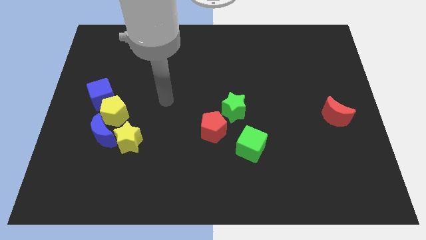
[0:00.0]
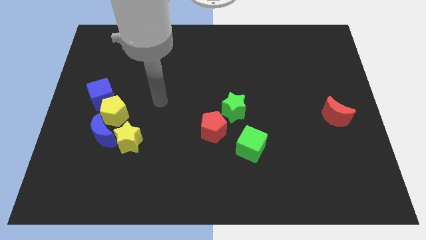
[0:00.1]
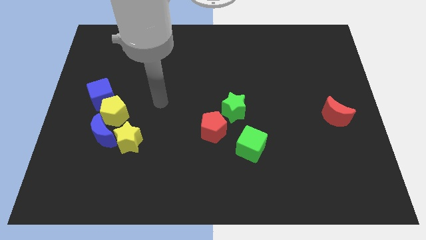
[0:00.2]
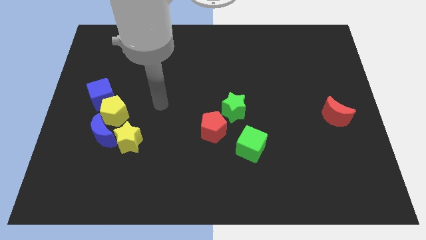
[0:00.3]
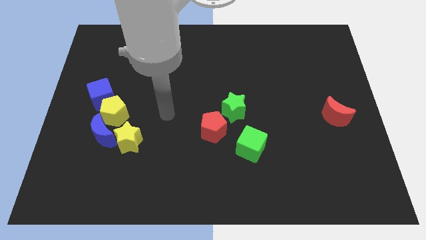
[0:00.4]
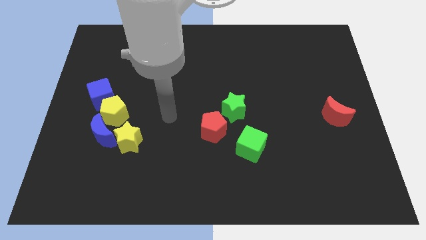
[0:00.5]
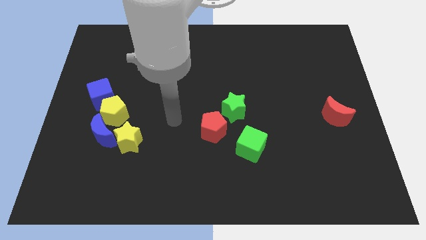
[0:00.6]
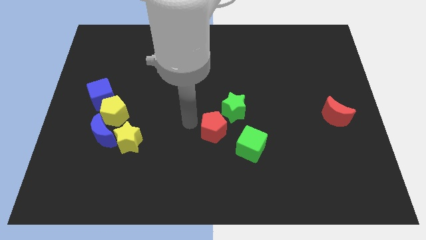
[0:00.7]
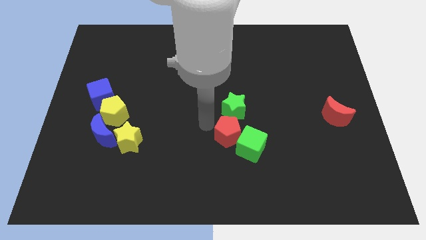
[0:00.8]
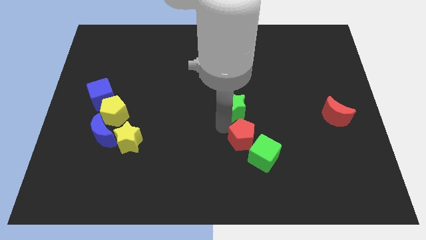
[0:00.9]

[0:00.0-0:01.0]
push the red pentagon into the green cube

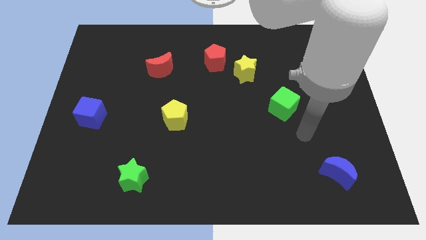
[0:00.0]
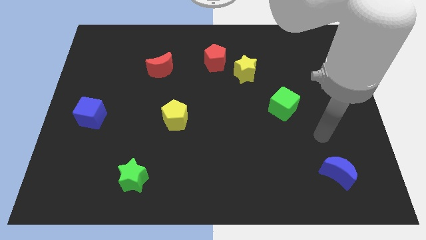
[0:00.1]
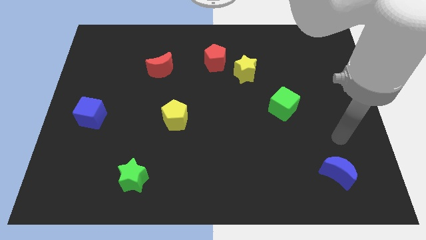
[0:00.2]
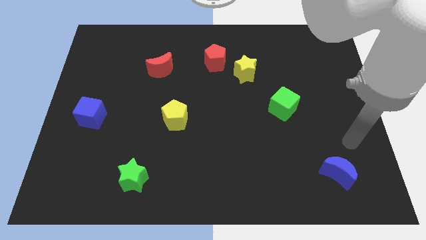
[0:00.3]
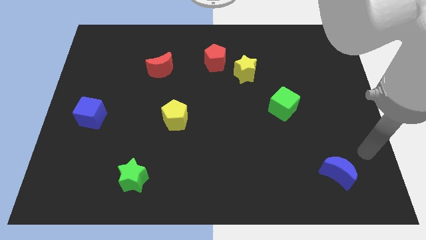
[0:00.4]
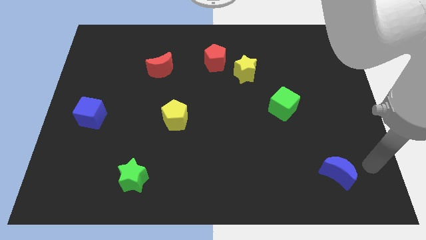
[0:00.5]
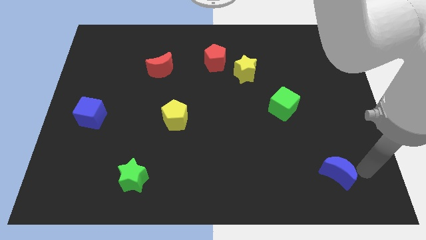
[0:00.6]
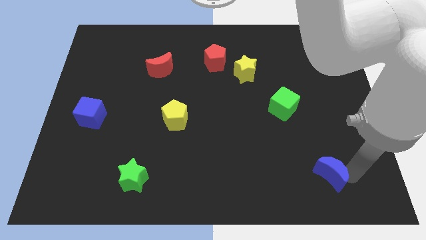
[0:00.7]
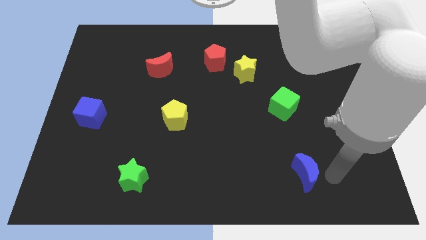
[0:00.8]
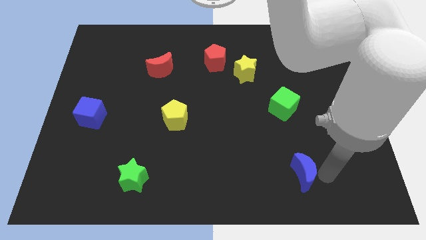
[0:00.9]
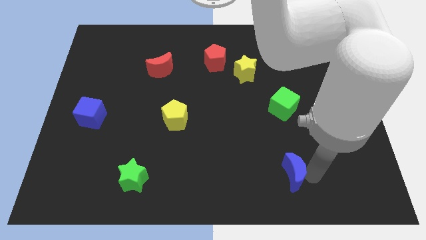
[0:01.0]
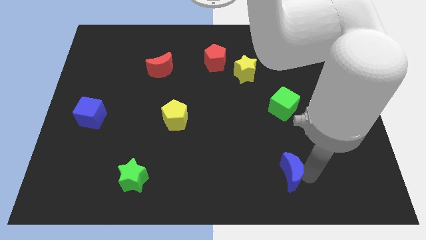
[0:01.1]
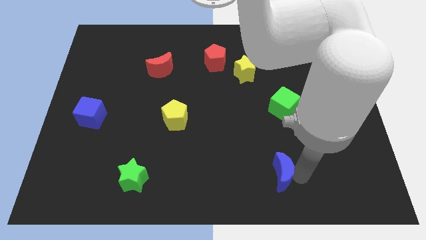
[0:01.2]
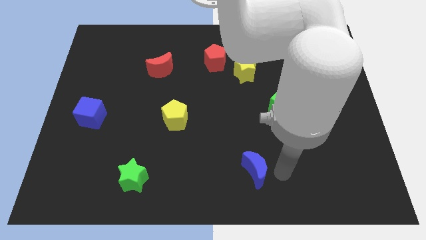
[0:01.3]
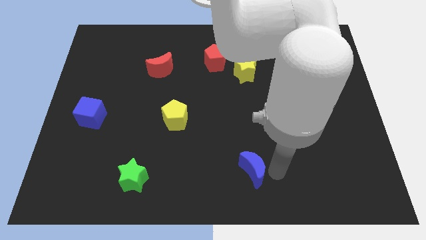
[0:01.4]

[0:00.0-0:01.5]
push the blue moon to horizontal right to green star

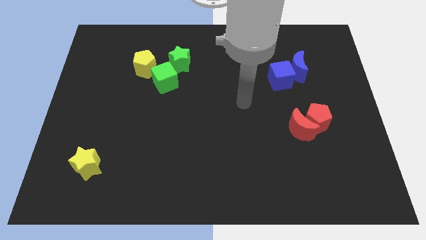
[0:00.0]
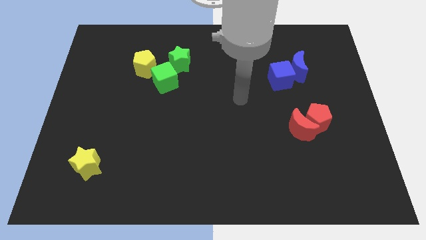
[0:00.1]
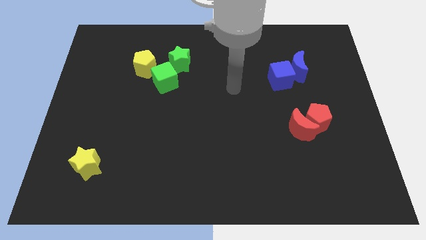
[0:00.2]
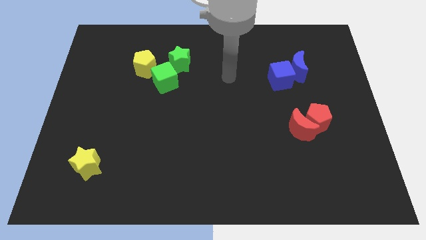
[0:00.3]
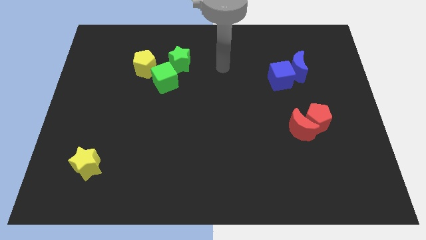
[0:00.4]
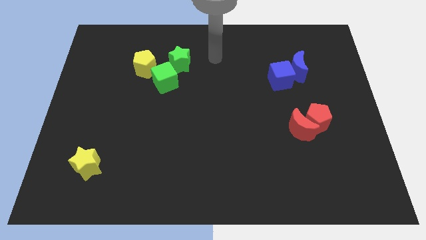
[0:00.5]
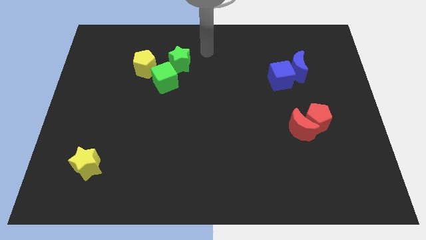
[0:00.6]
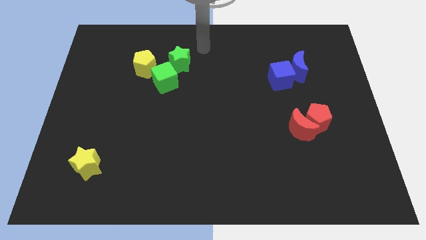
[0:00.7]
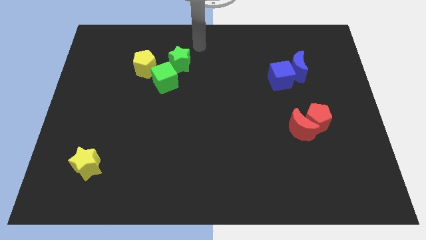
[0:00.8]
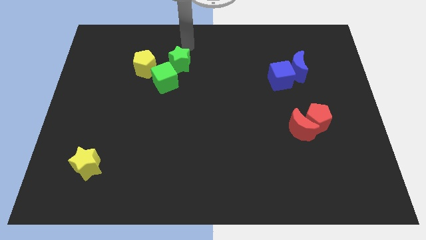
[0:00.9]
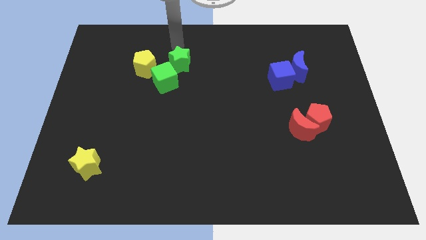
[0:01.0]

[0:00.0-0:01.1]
point the arm above the green star

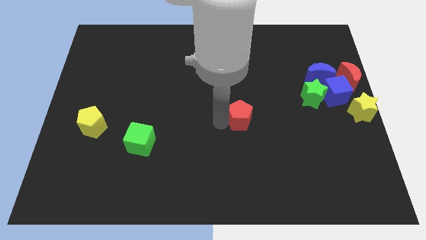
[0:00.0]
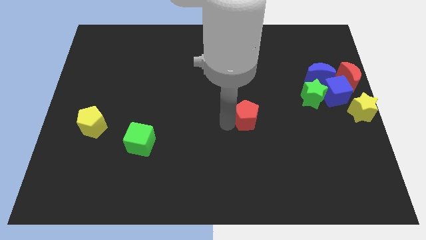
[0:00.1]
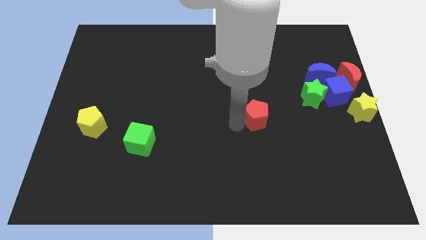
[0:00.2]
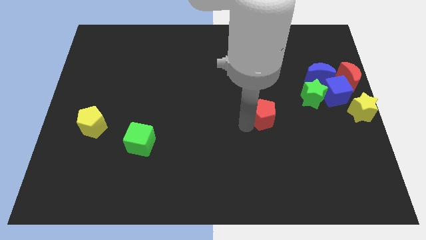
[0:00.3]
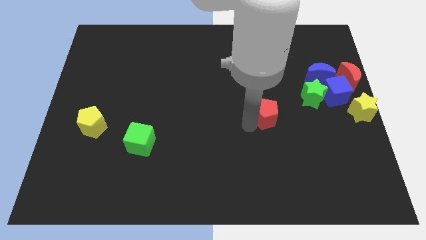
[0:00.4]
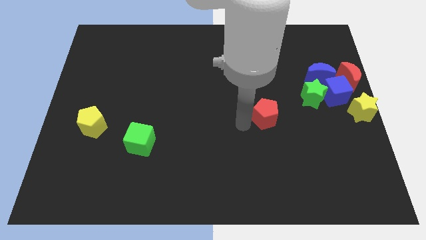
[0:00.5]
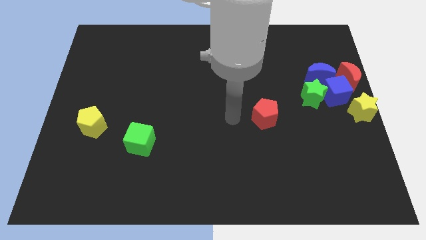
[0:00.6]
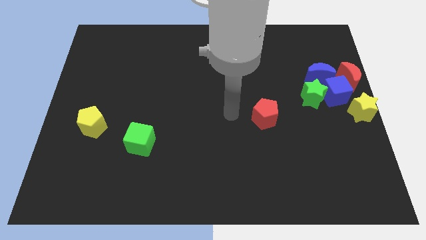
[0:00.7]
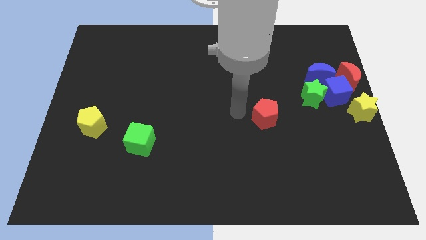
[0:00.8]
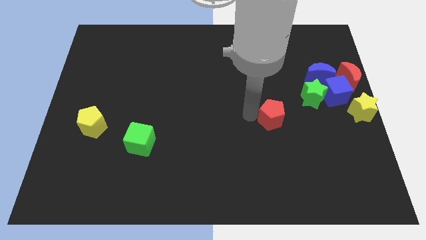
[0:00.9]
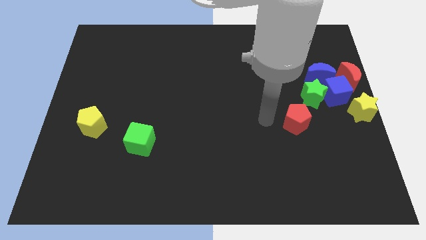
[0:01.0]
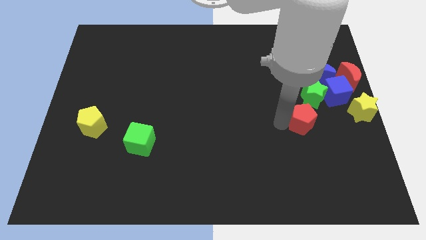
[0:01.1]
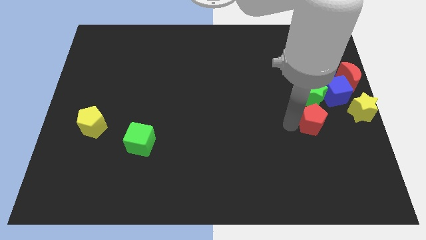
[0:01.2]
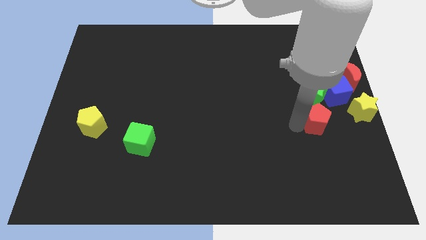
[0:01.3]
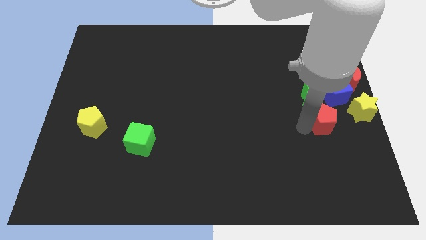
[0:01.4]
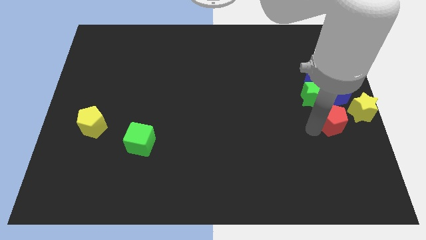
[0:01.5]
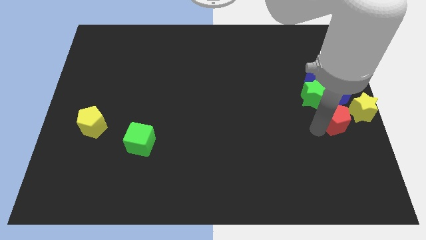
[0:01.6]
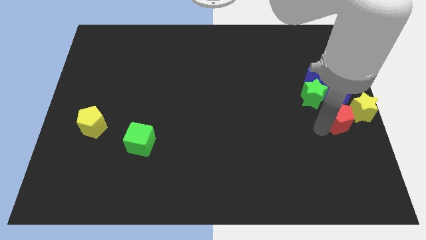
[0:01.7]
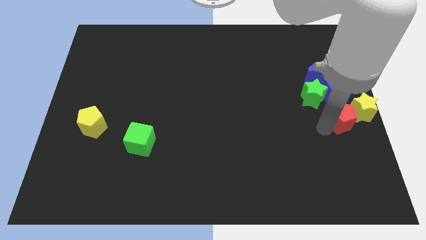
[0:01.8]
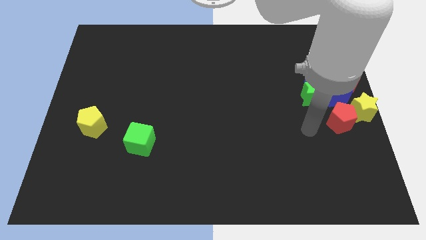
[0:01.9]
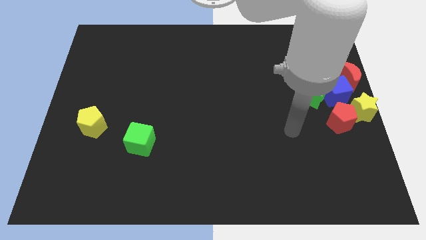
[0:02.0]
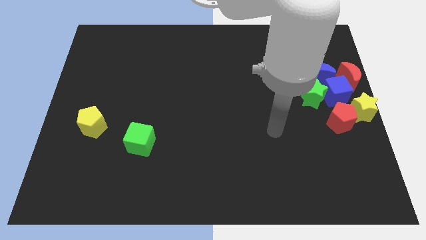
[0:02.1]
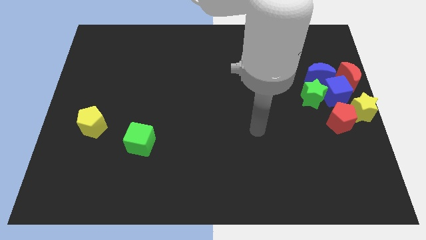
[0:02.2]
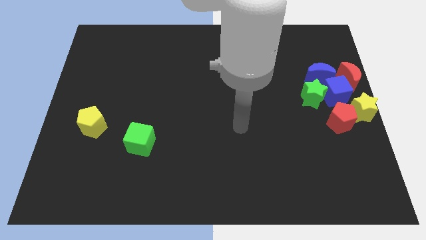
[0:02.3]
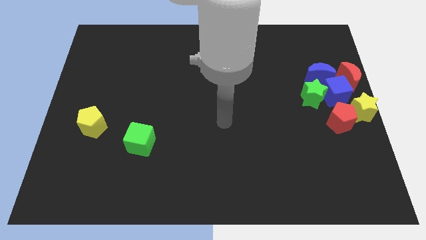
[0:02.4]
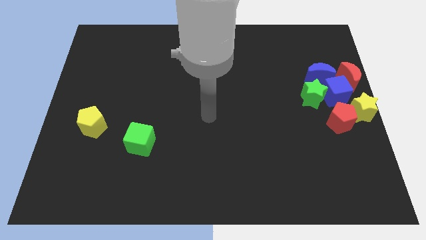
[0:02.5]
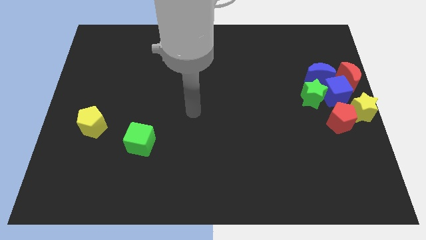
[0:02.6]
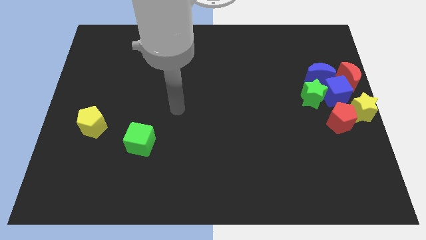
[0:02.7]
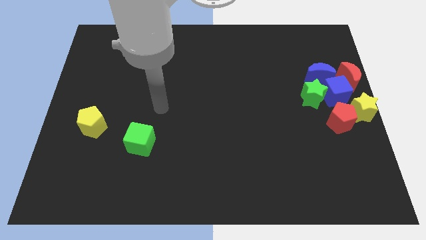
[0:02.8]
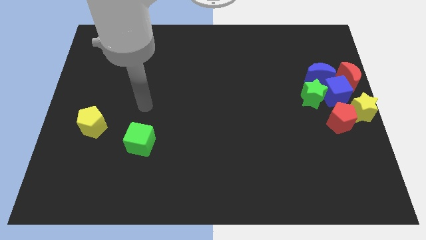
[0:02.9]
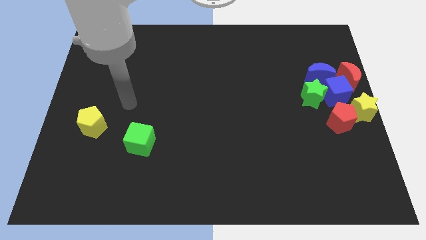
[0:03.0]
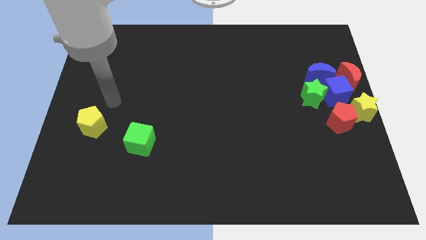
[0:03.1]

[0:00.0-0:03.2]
slide the red pentagon left to the yellow star

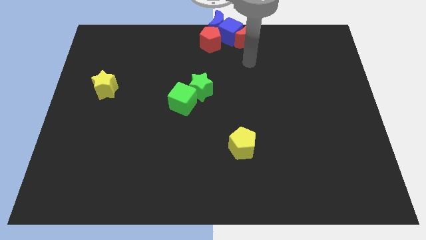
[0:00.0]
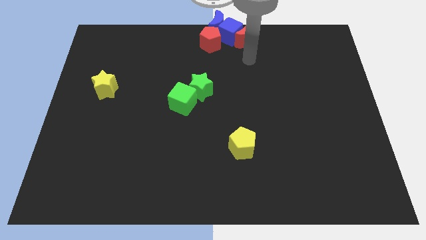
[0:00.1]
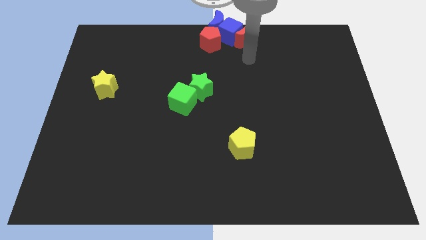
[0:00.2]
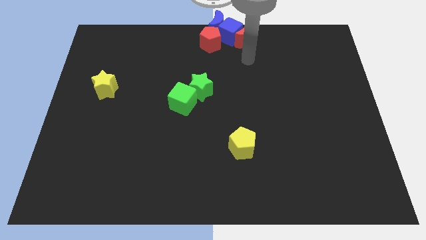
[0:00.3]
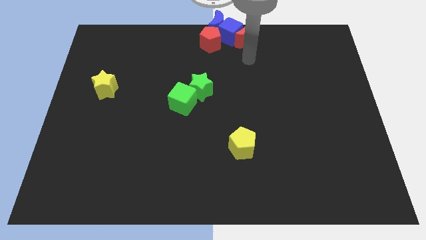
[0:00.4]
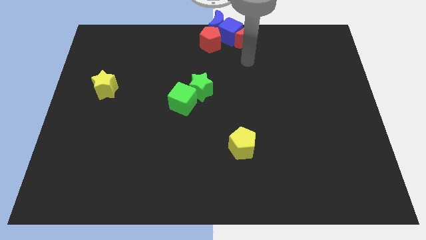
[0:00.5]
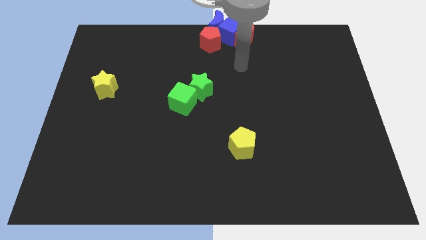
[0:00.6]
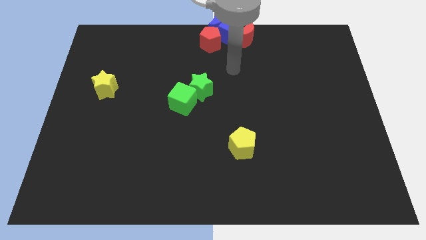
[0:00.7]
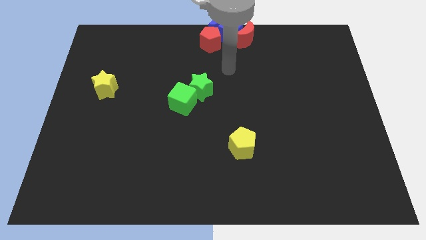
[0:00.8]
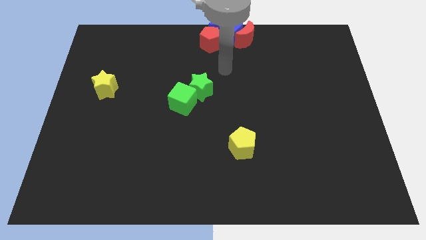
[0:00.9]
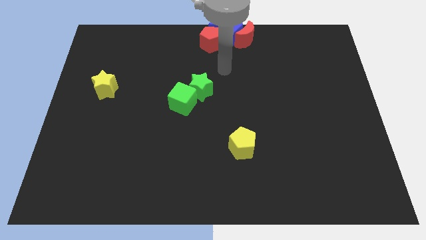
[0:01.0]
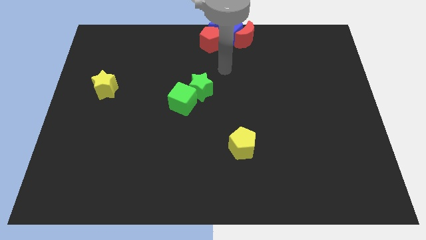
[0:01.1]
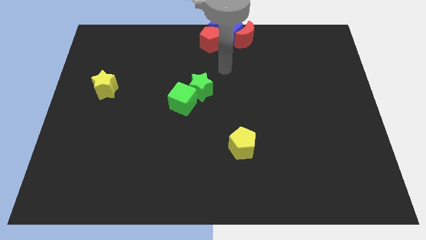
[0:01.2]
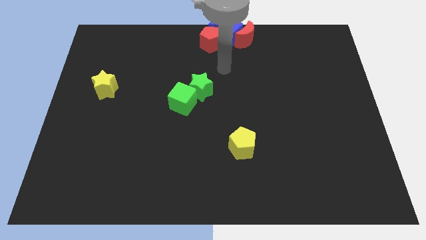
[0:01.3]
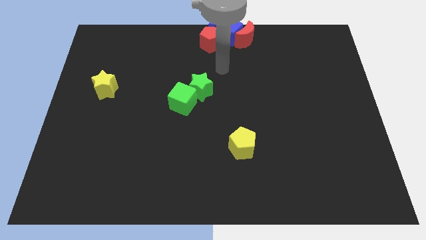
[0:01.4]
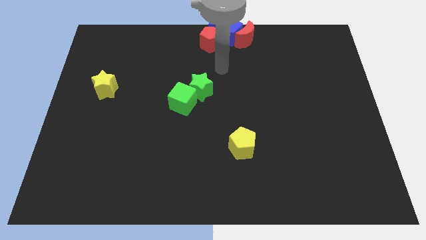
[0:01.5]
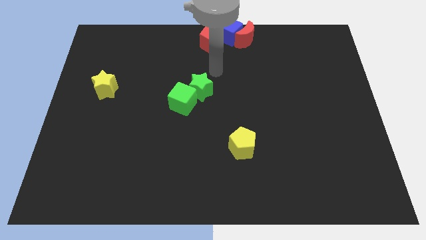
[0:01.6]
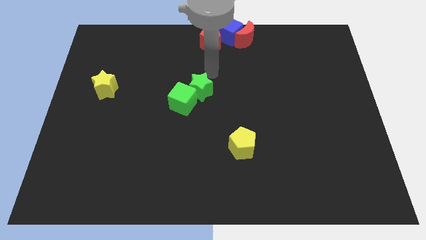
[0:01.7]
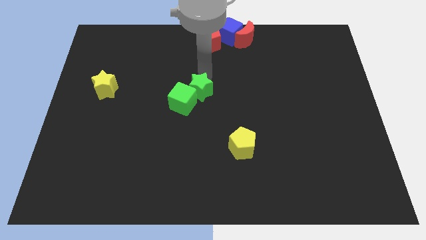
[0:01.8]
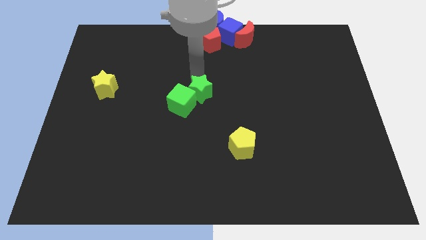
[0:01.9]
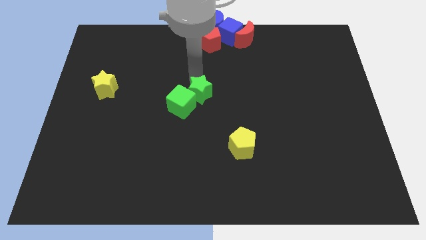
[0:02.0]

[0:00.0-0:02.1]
move the arm towards the green star
